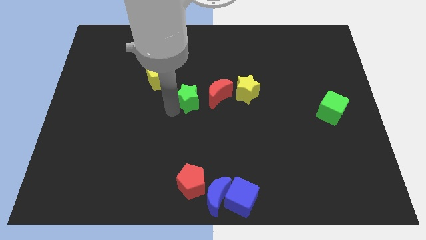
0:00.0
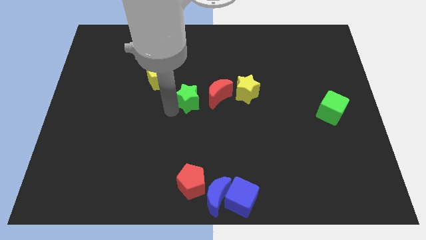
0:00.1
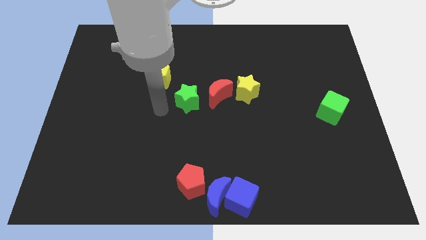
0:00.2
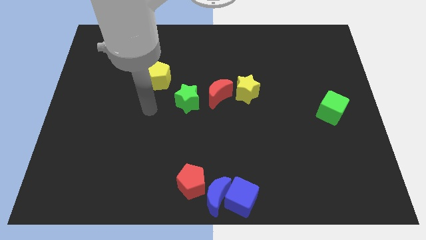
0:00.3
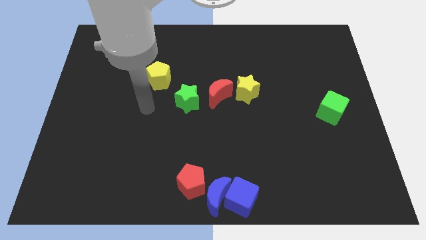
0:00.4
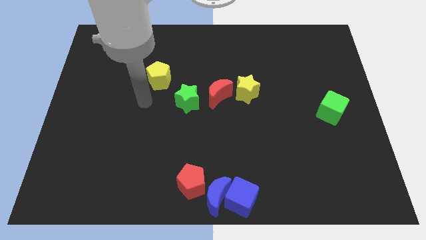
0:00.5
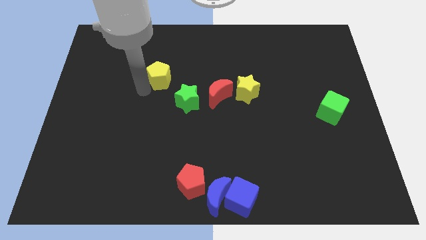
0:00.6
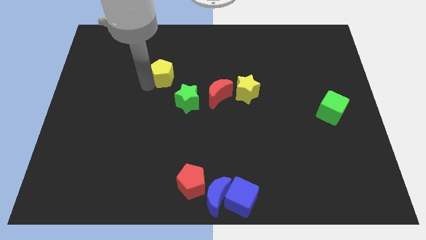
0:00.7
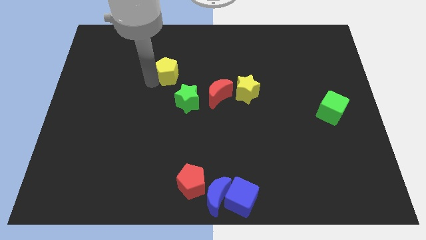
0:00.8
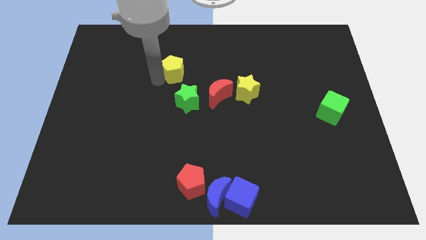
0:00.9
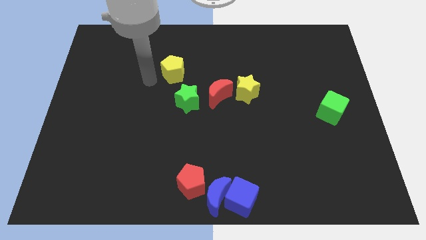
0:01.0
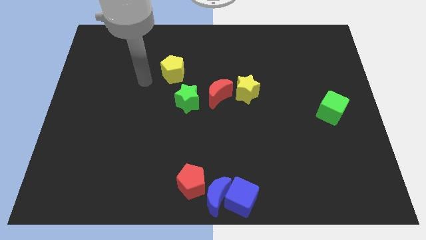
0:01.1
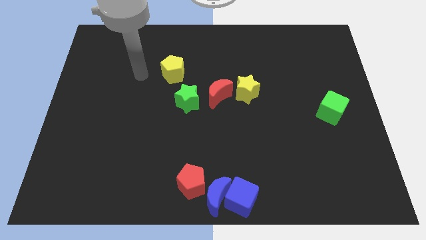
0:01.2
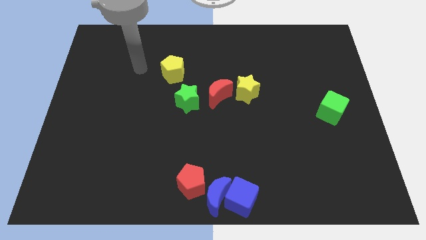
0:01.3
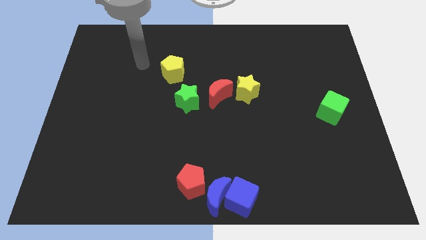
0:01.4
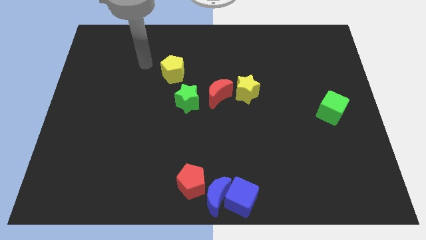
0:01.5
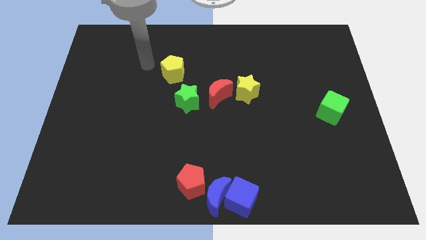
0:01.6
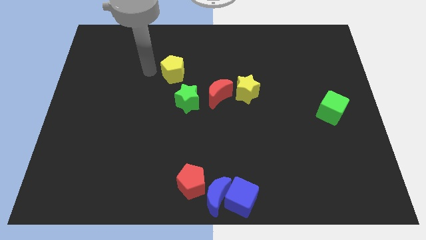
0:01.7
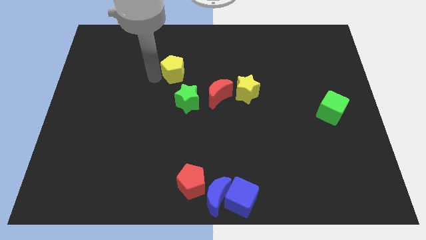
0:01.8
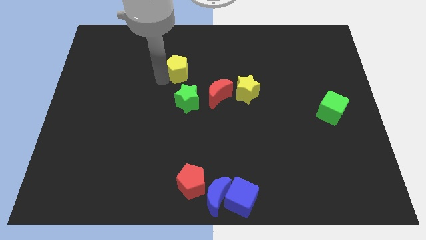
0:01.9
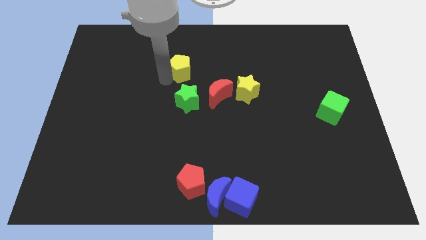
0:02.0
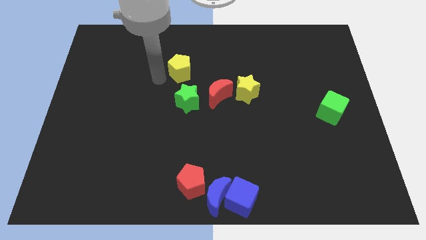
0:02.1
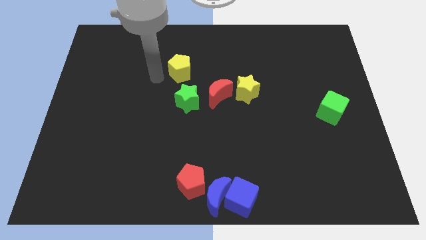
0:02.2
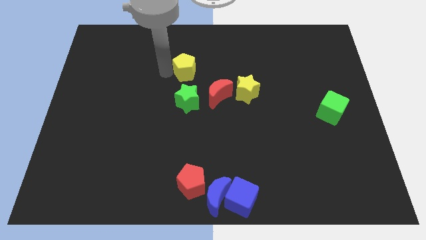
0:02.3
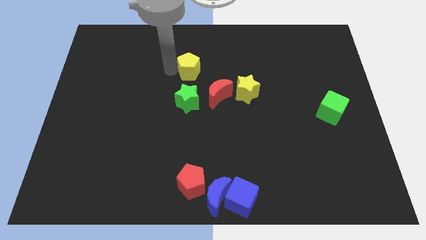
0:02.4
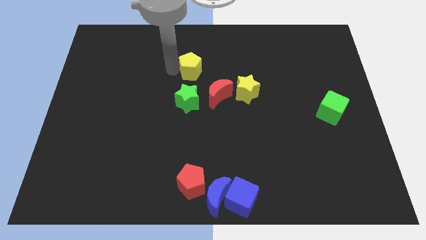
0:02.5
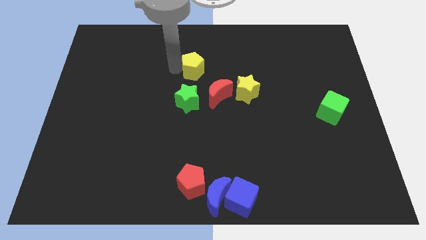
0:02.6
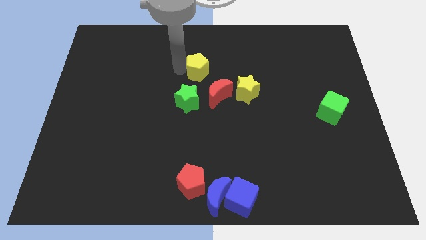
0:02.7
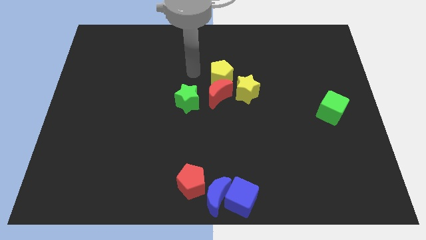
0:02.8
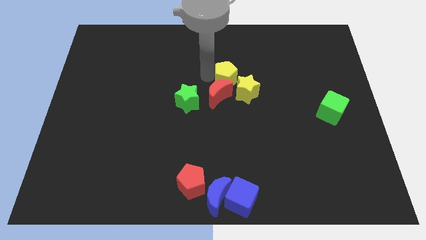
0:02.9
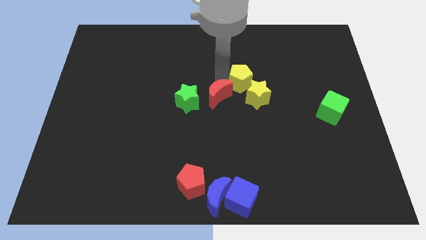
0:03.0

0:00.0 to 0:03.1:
slide yellow pentagon close to the yellow star

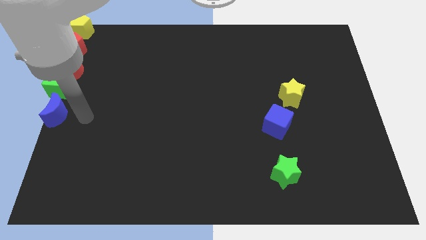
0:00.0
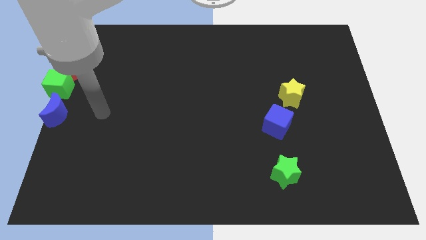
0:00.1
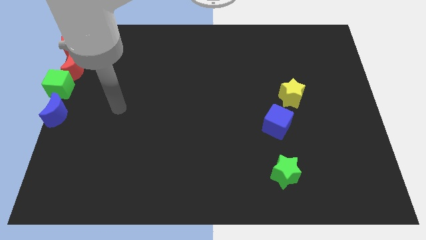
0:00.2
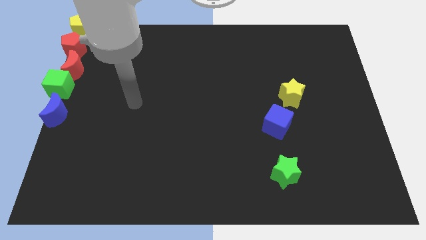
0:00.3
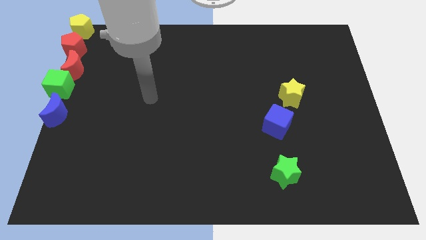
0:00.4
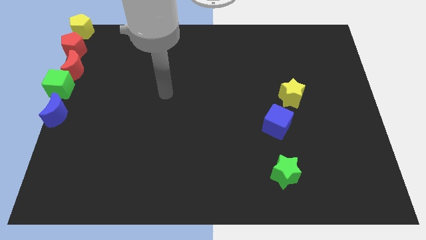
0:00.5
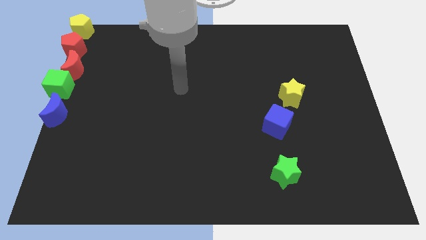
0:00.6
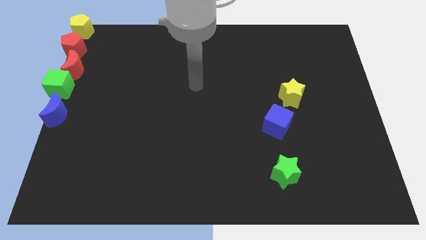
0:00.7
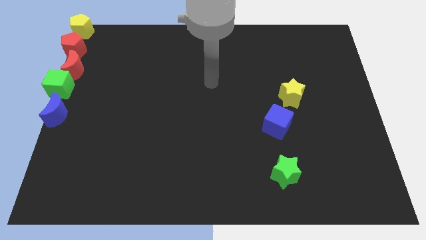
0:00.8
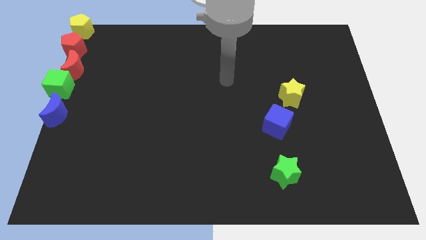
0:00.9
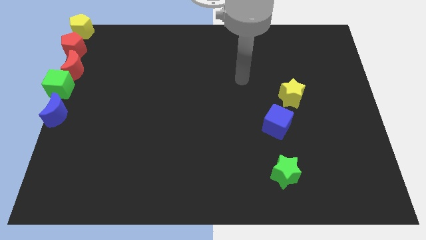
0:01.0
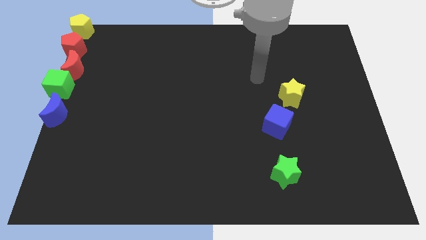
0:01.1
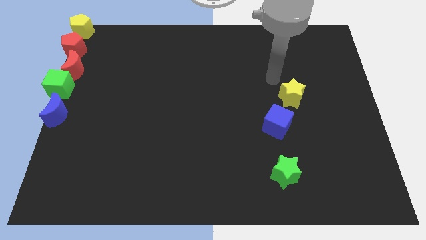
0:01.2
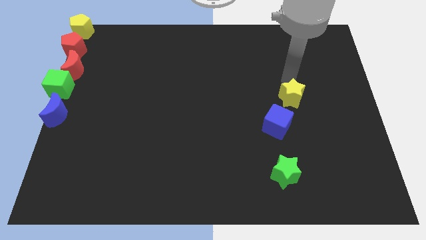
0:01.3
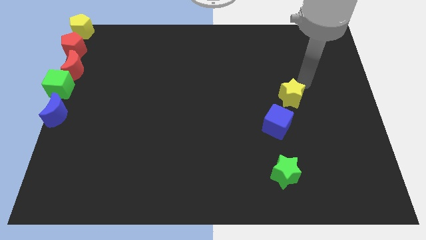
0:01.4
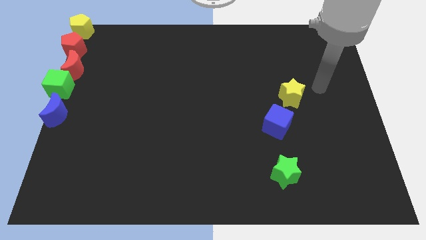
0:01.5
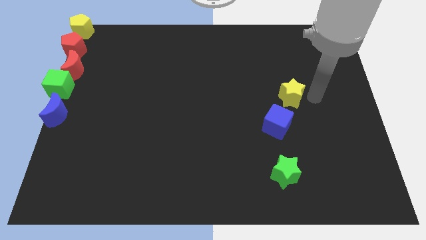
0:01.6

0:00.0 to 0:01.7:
move your arm right to the yellow star

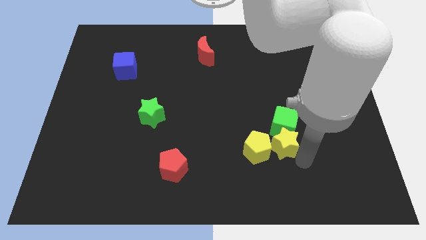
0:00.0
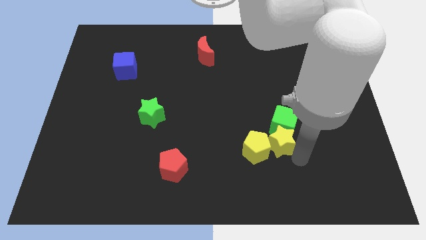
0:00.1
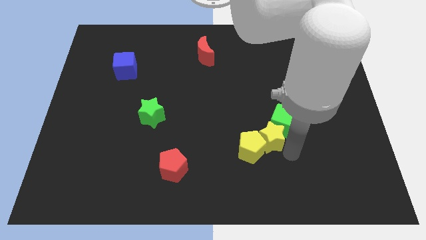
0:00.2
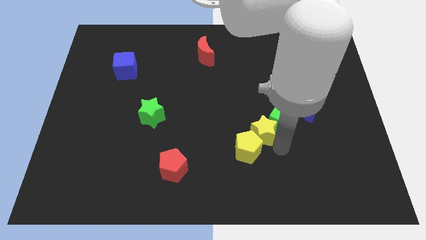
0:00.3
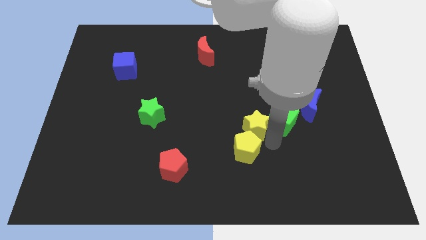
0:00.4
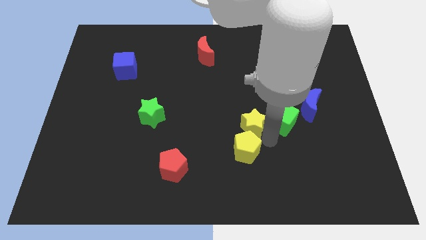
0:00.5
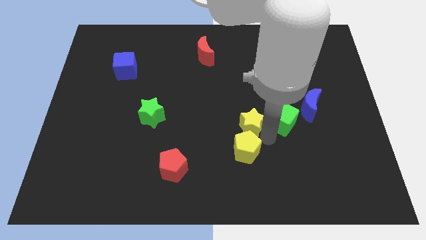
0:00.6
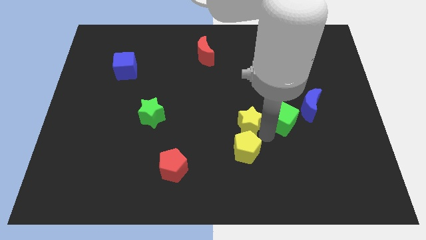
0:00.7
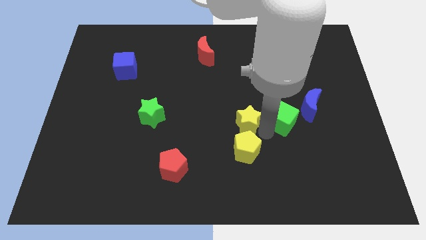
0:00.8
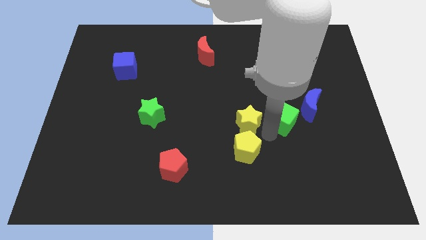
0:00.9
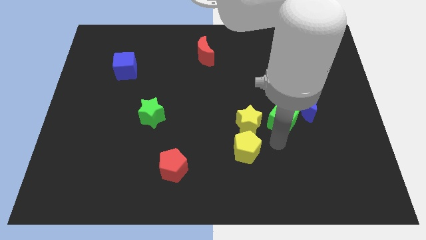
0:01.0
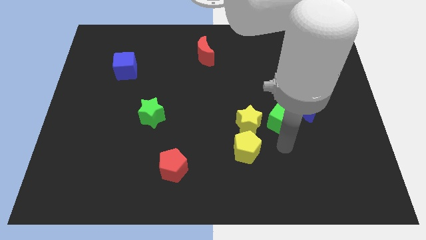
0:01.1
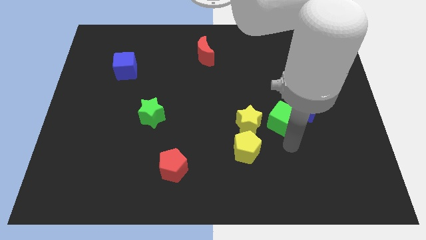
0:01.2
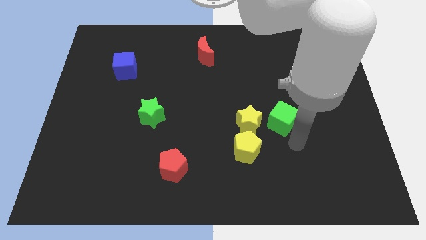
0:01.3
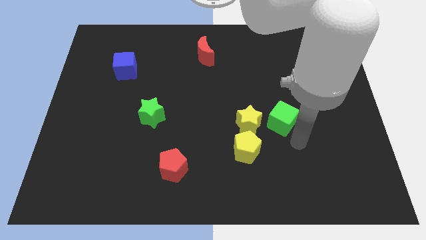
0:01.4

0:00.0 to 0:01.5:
put the yellow star above the yellow pentagon

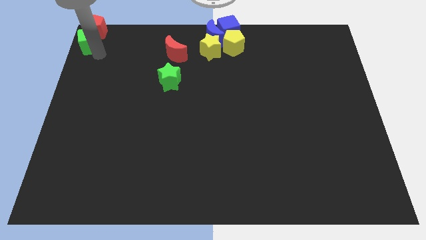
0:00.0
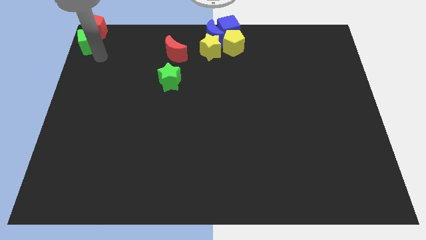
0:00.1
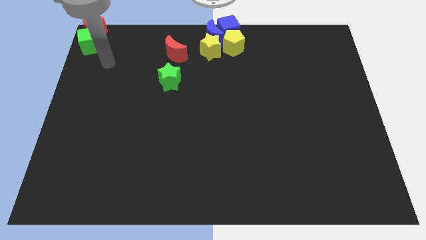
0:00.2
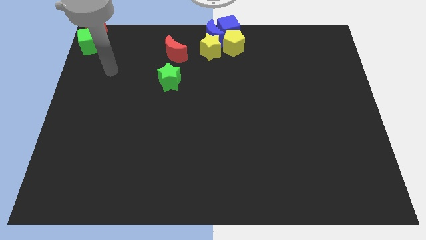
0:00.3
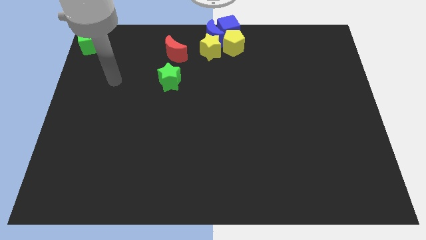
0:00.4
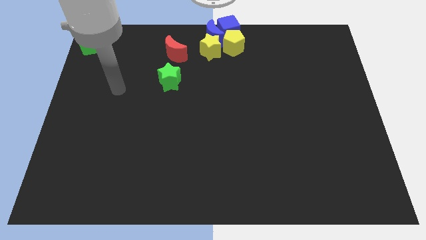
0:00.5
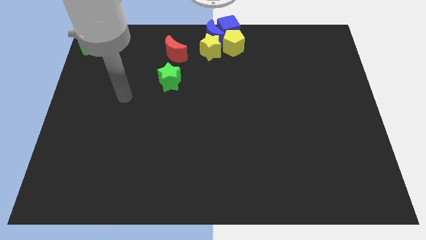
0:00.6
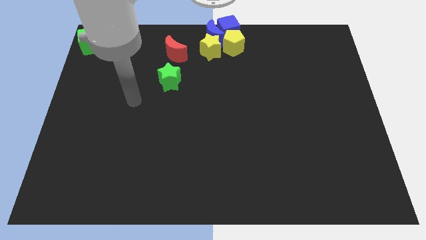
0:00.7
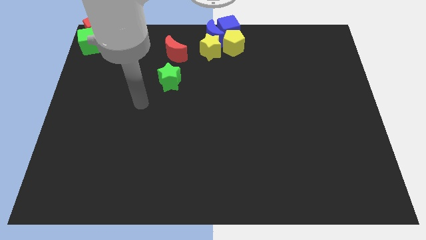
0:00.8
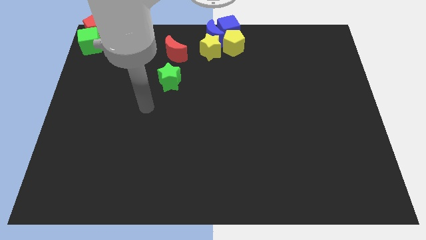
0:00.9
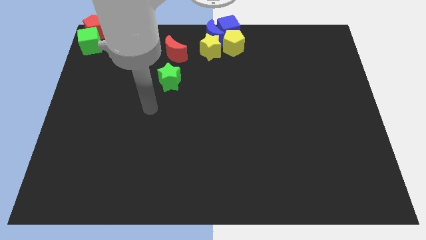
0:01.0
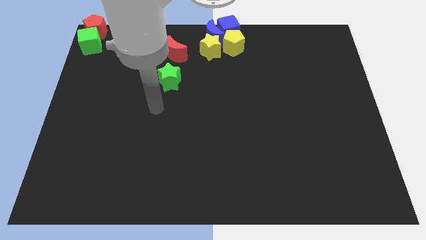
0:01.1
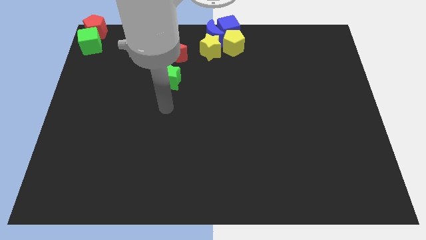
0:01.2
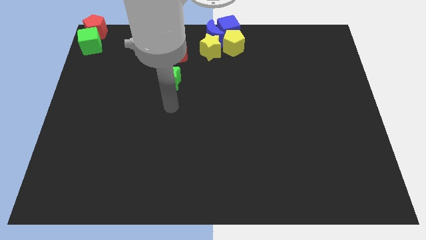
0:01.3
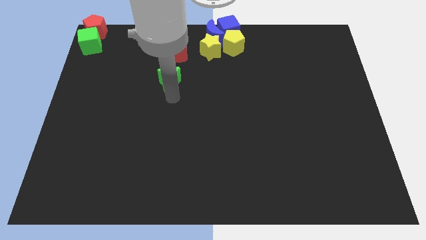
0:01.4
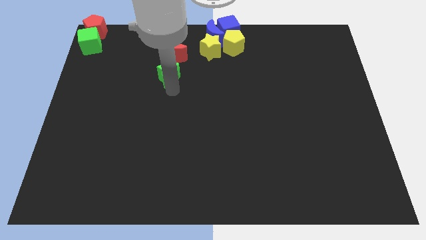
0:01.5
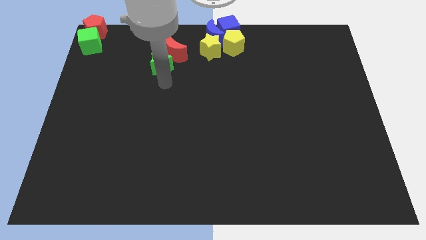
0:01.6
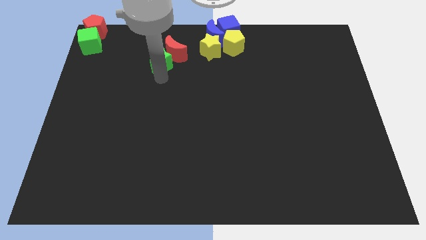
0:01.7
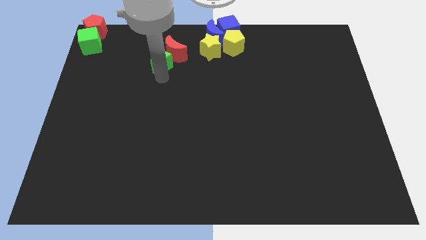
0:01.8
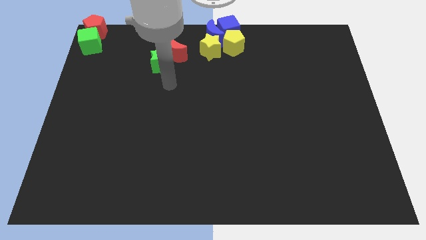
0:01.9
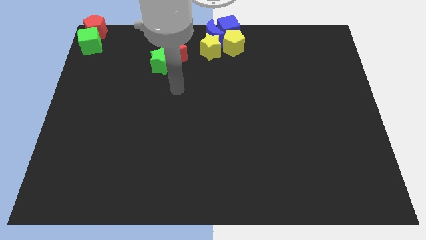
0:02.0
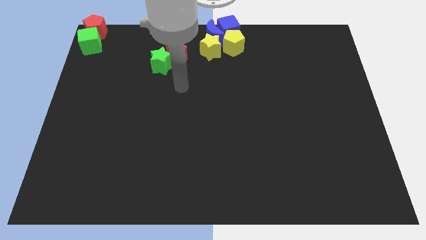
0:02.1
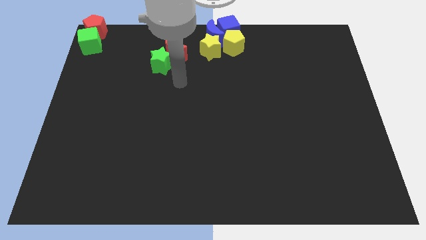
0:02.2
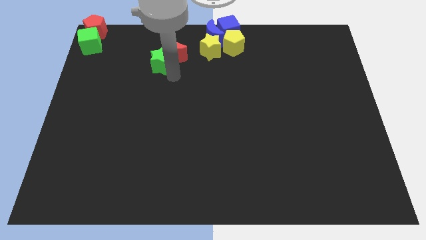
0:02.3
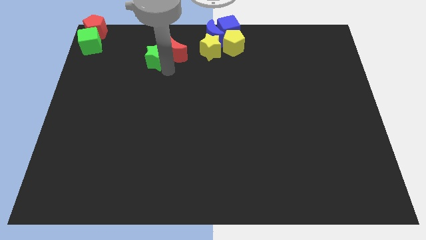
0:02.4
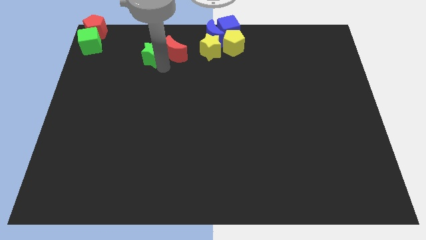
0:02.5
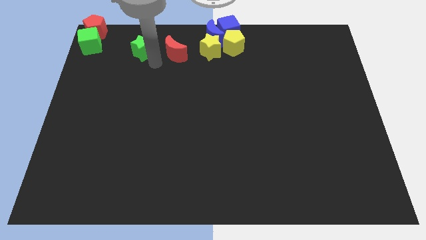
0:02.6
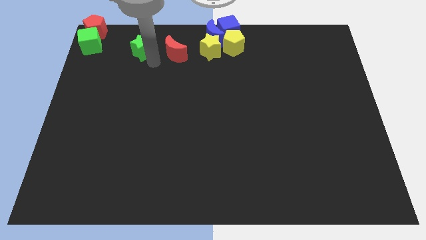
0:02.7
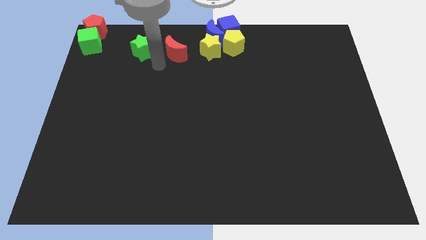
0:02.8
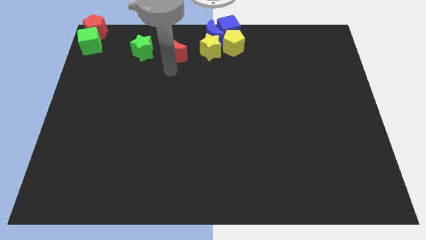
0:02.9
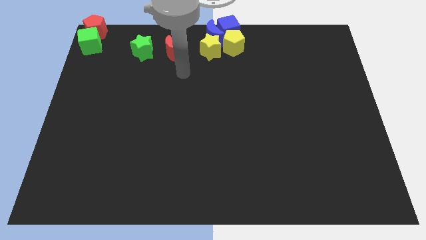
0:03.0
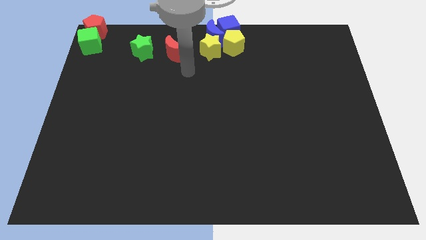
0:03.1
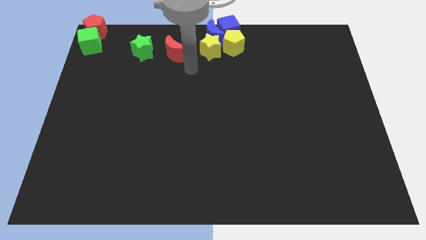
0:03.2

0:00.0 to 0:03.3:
put the green star at the left side of the red crescent
